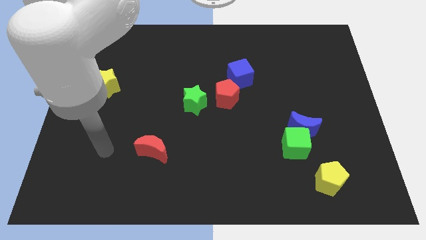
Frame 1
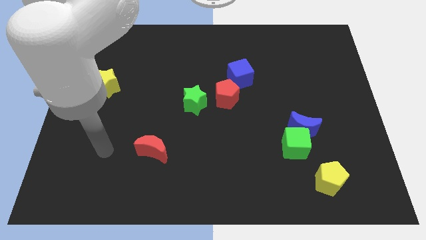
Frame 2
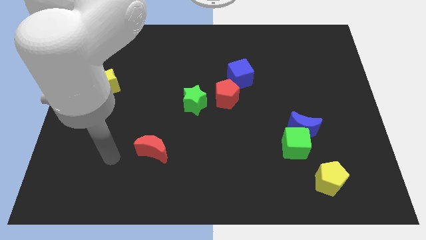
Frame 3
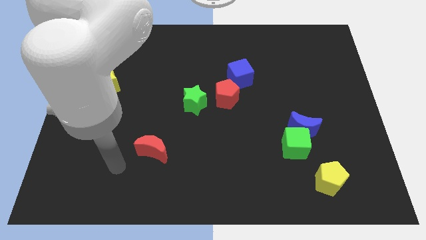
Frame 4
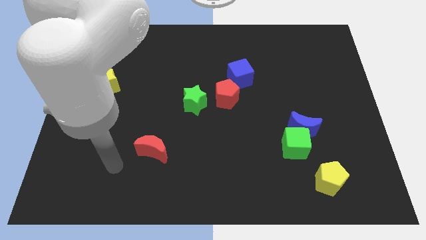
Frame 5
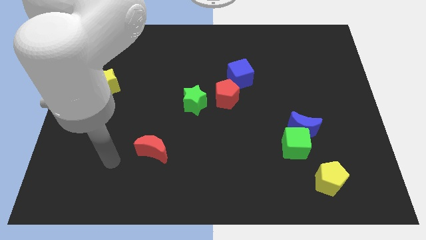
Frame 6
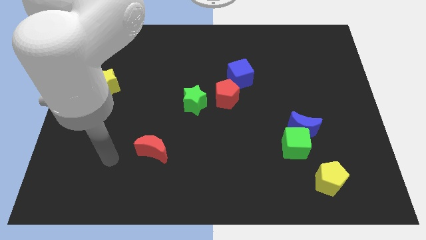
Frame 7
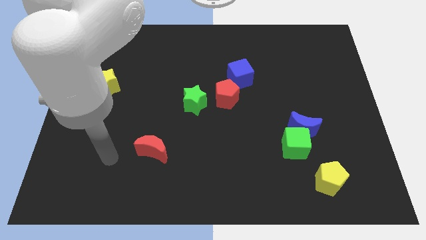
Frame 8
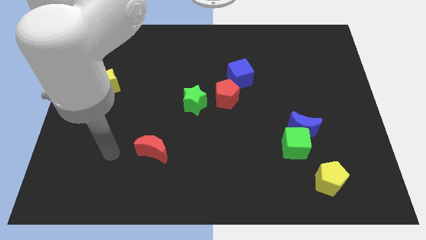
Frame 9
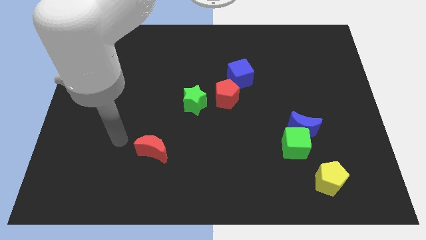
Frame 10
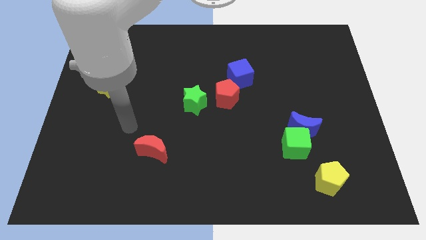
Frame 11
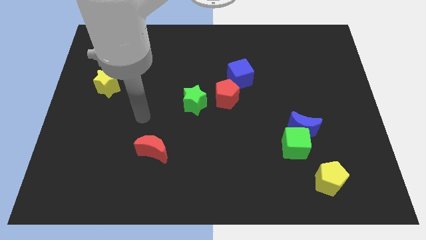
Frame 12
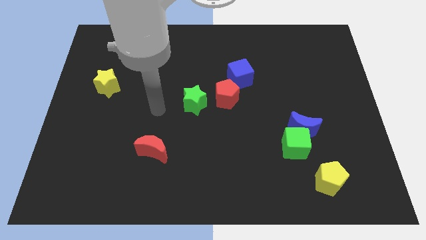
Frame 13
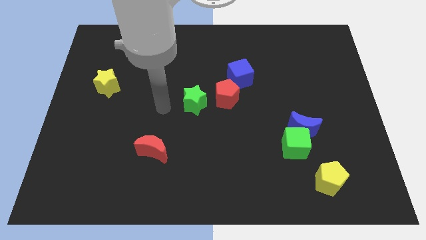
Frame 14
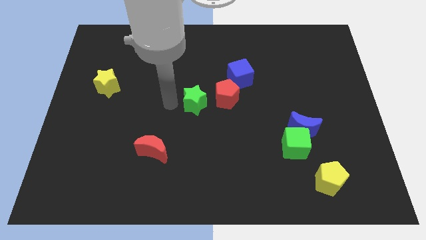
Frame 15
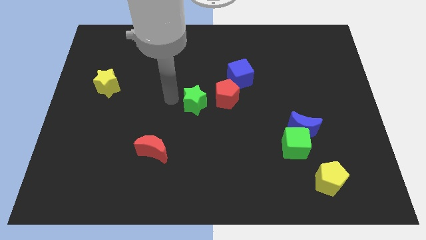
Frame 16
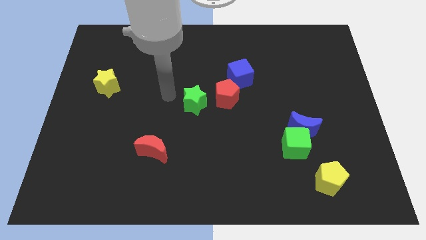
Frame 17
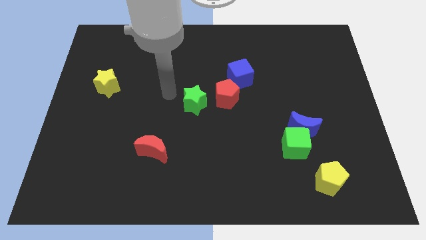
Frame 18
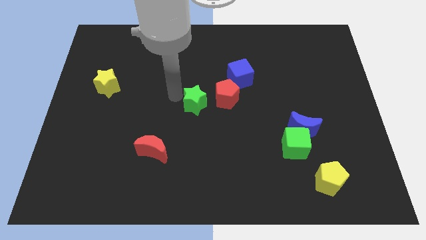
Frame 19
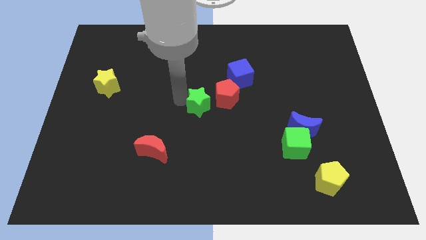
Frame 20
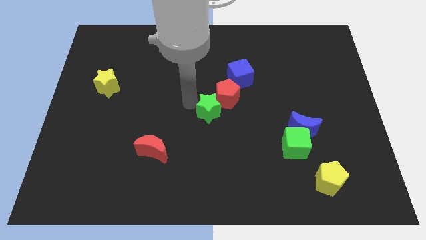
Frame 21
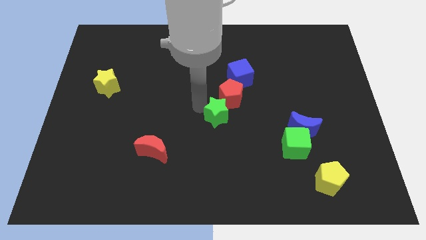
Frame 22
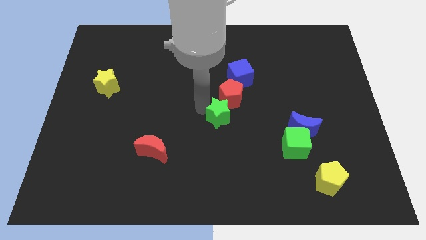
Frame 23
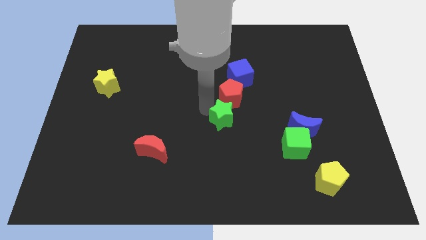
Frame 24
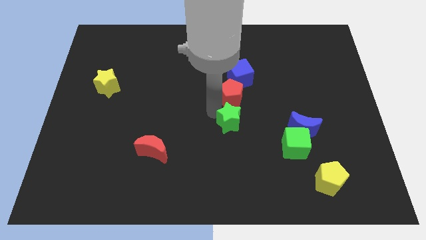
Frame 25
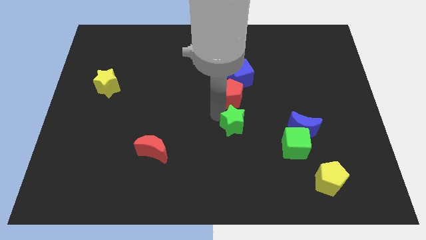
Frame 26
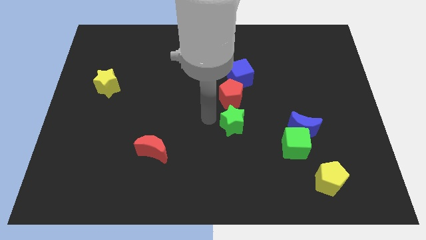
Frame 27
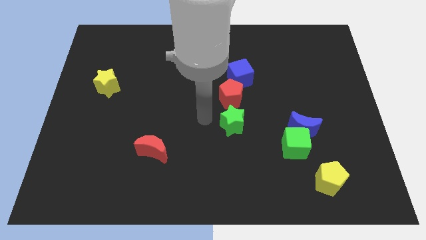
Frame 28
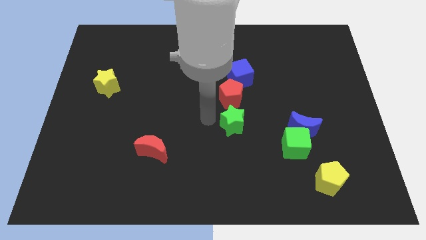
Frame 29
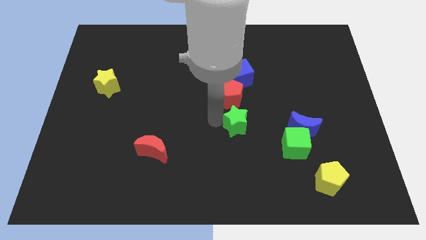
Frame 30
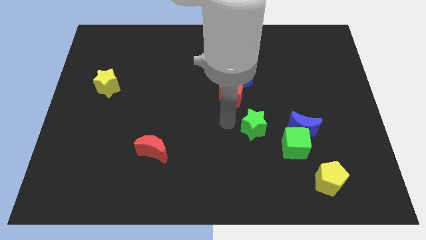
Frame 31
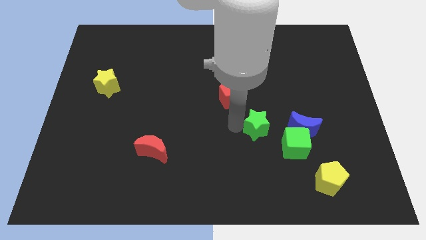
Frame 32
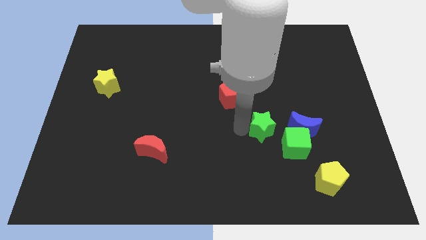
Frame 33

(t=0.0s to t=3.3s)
place the green star left to the blue moon

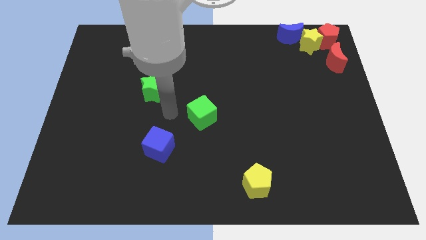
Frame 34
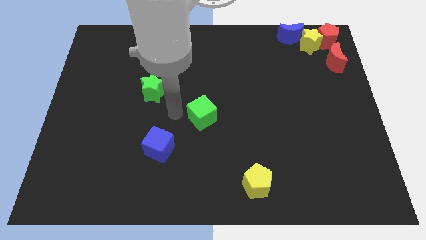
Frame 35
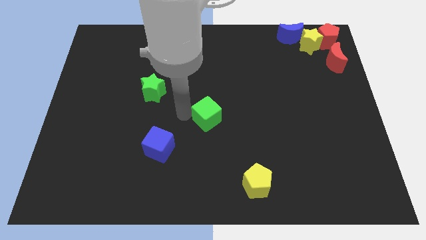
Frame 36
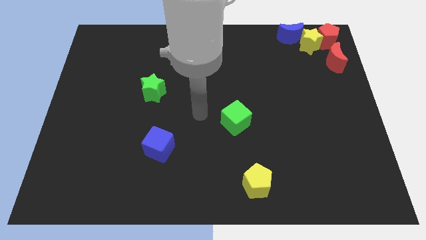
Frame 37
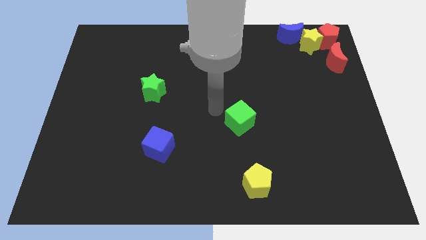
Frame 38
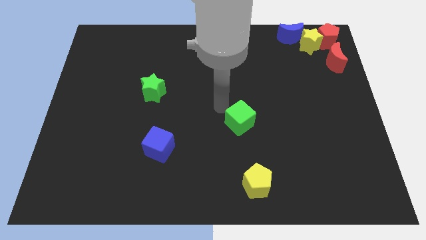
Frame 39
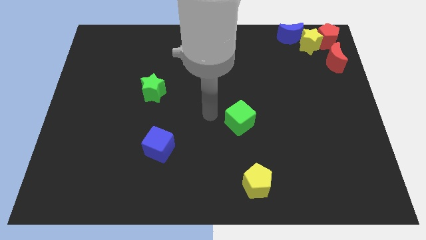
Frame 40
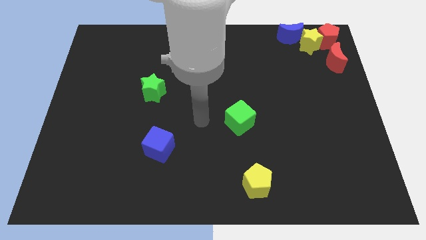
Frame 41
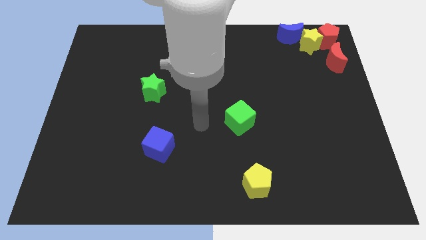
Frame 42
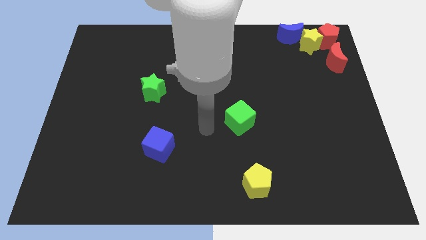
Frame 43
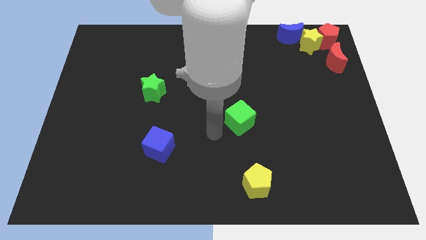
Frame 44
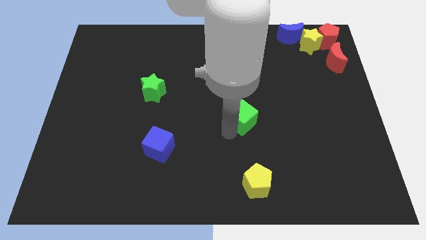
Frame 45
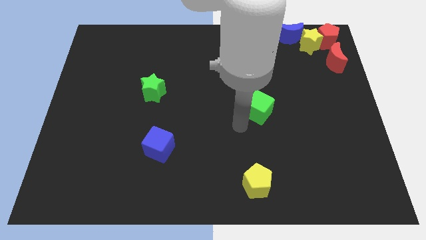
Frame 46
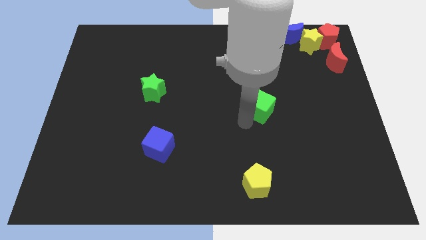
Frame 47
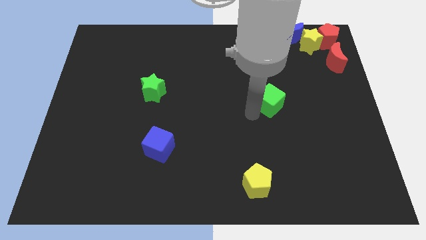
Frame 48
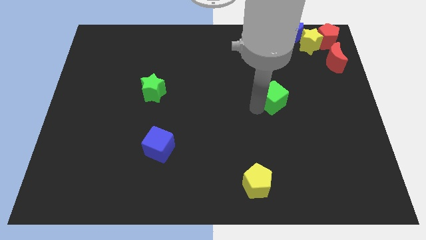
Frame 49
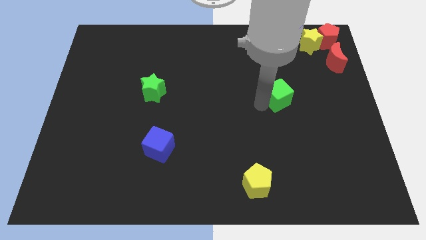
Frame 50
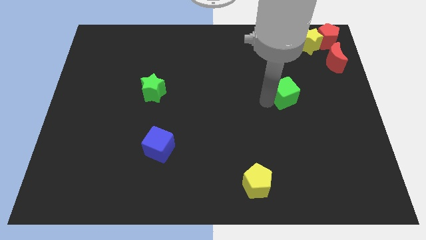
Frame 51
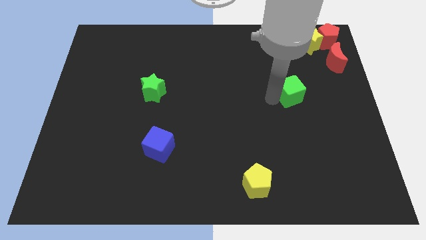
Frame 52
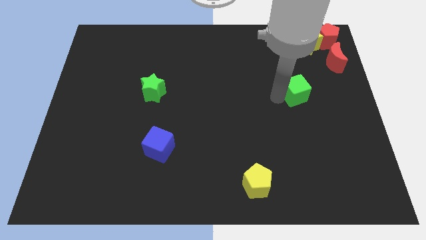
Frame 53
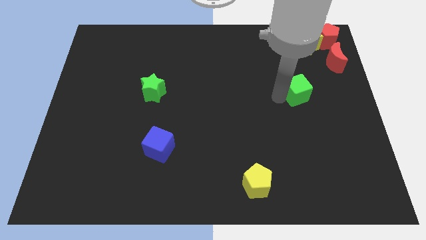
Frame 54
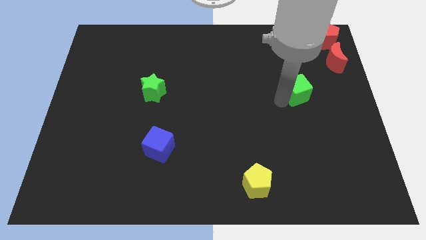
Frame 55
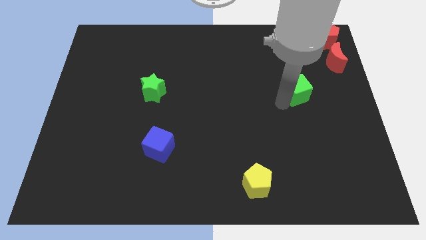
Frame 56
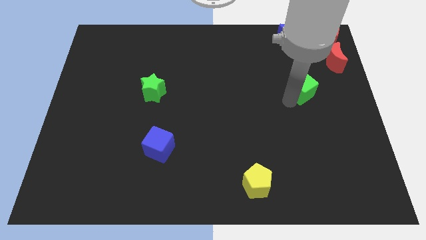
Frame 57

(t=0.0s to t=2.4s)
push green cube below blue crescent

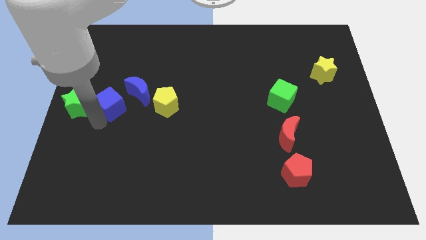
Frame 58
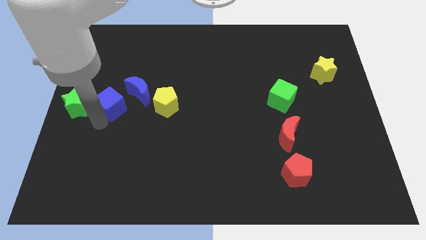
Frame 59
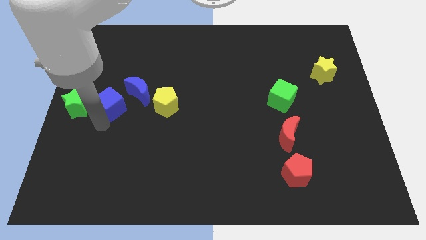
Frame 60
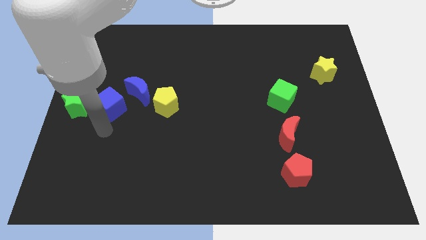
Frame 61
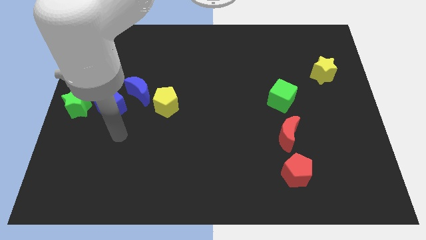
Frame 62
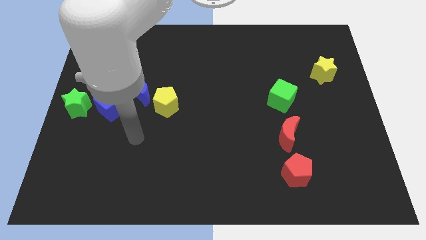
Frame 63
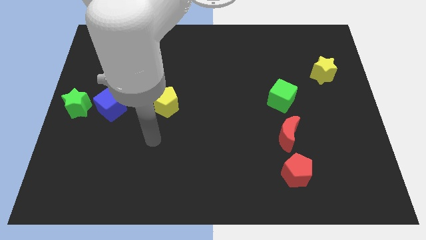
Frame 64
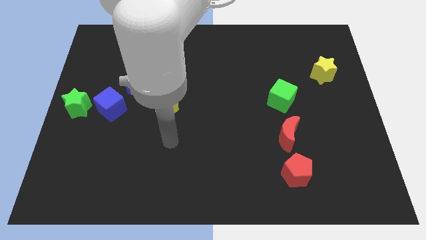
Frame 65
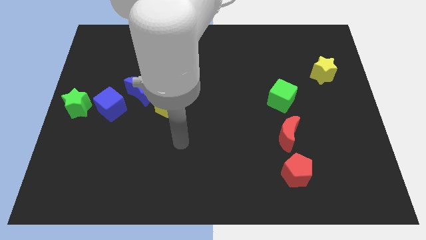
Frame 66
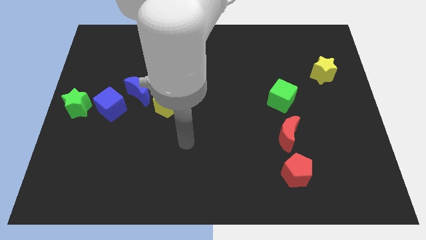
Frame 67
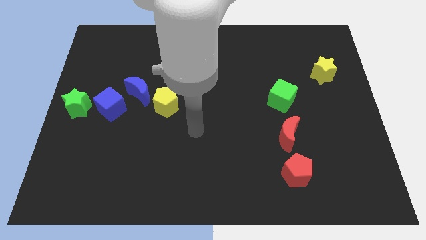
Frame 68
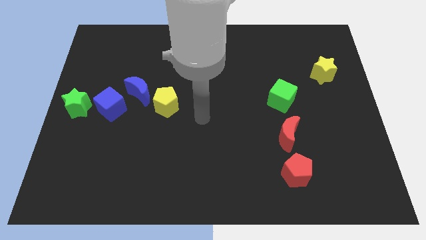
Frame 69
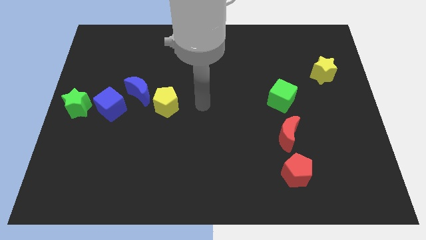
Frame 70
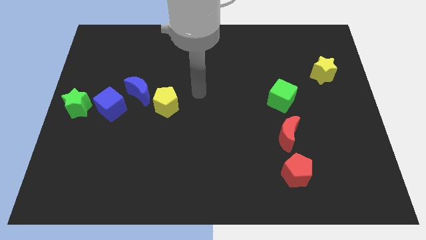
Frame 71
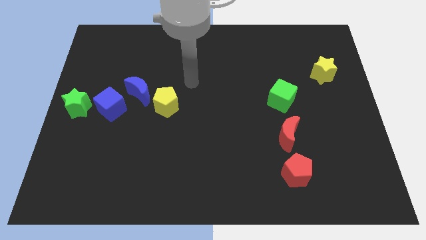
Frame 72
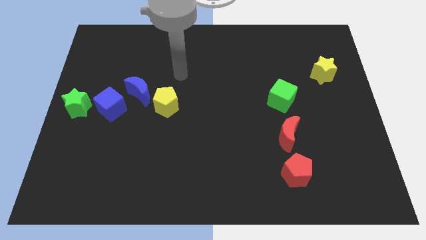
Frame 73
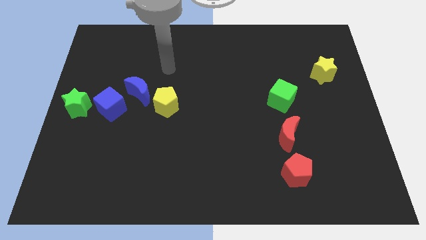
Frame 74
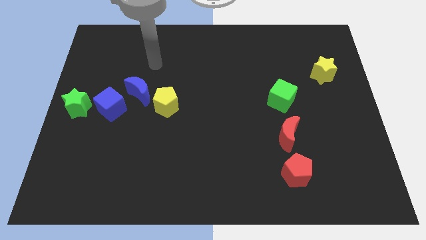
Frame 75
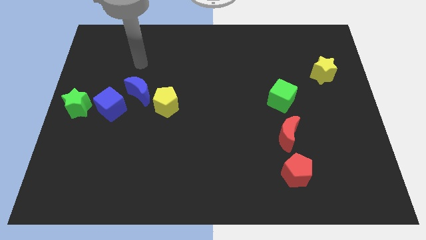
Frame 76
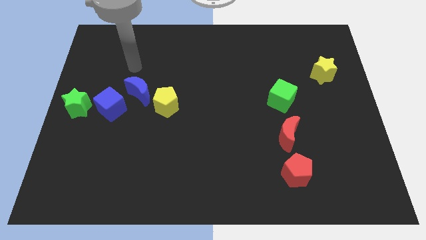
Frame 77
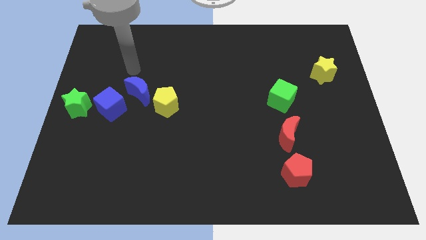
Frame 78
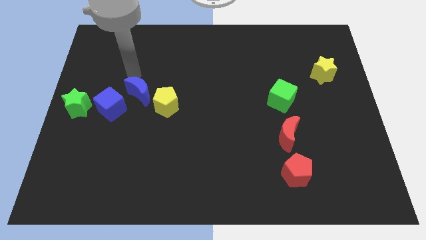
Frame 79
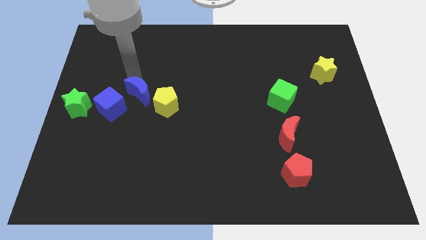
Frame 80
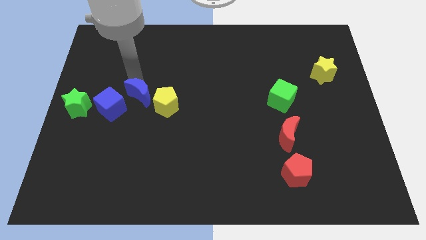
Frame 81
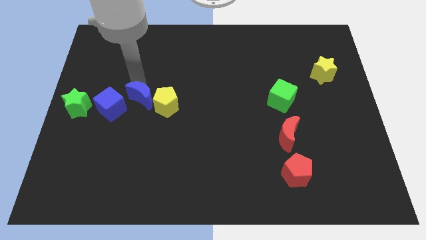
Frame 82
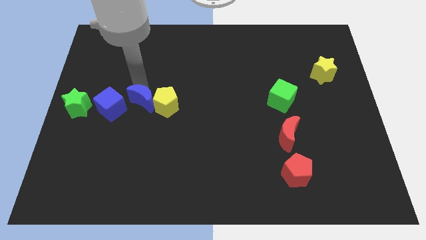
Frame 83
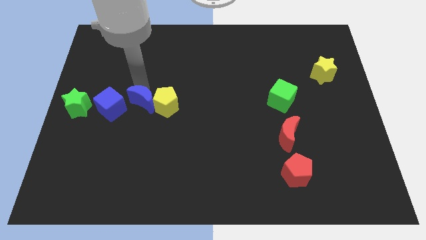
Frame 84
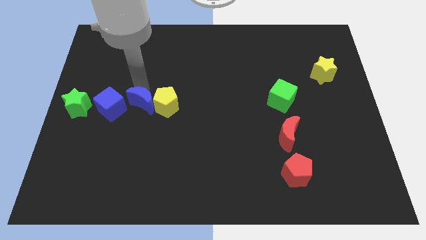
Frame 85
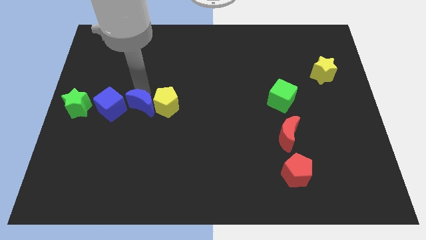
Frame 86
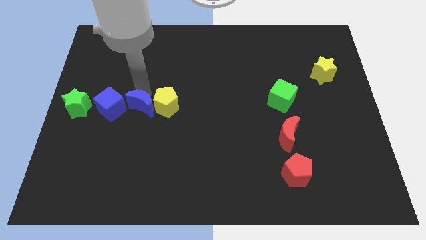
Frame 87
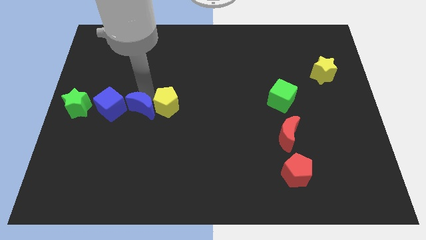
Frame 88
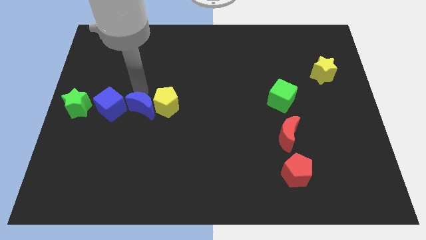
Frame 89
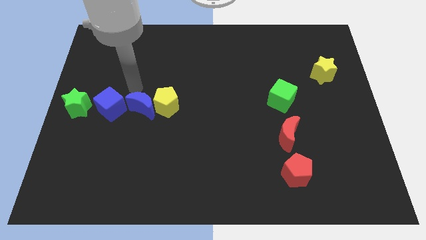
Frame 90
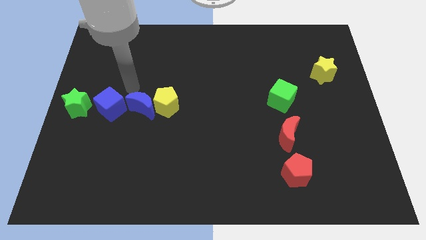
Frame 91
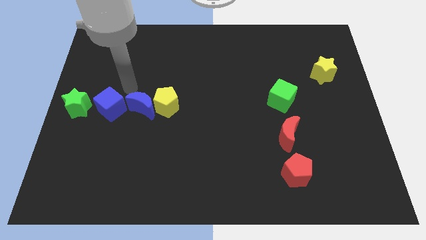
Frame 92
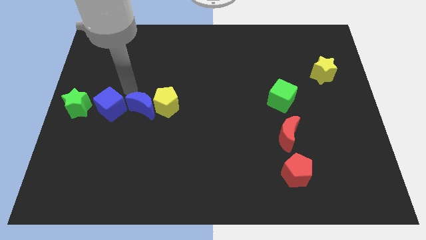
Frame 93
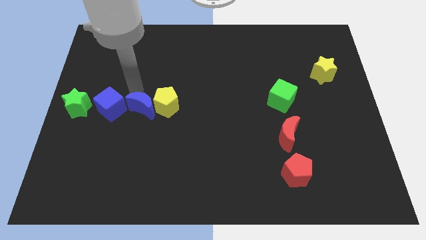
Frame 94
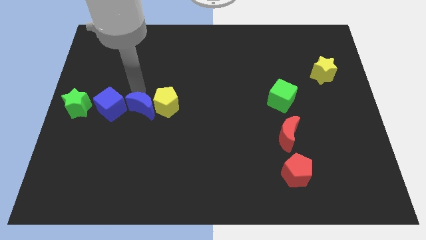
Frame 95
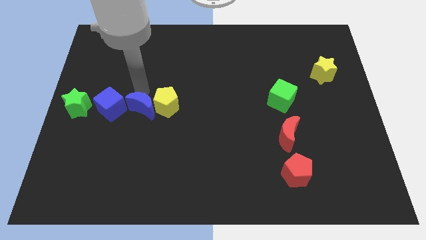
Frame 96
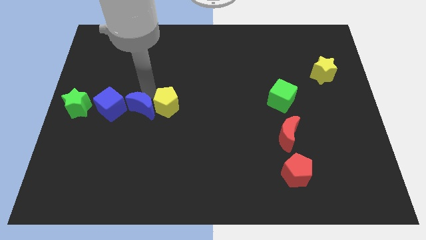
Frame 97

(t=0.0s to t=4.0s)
push the blue moon downward
